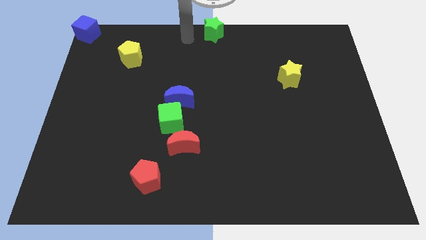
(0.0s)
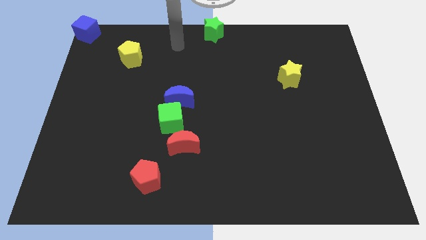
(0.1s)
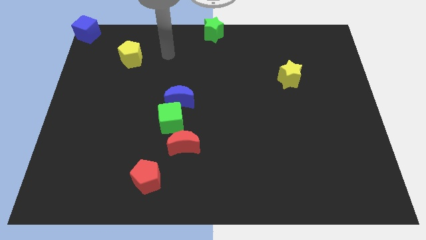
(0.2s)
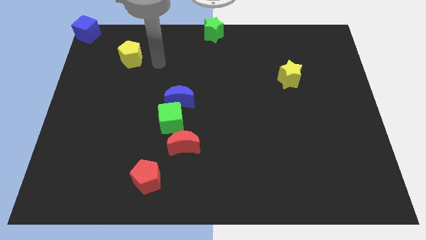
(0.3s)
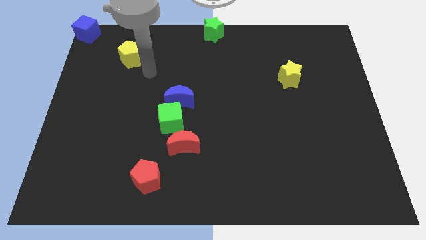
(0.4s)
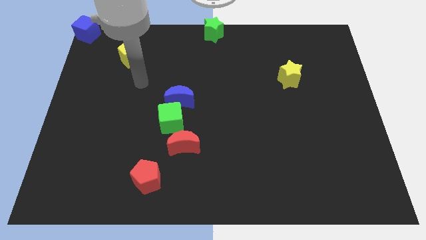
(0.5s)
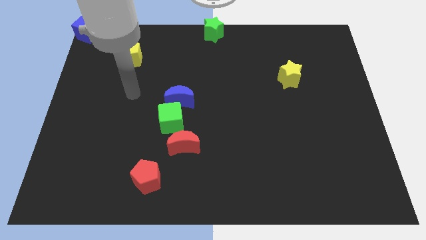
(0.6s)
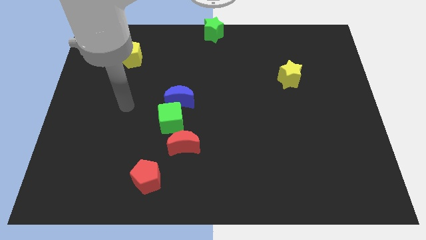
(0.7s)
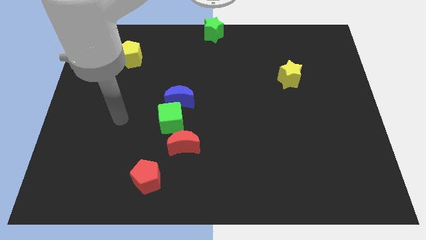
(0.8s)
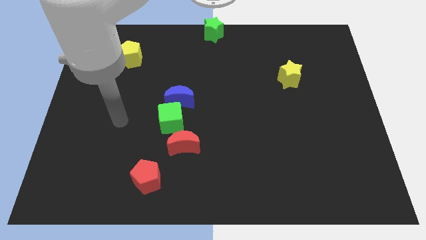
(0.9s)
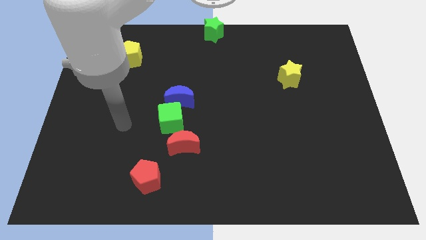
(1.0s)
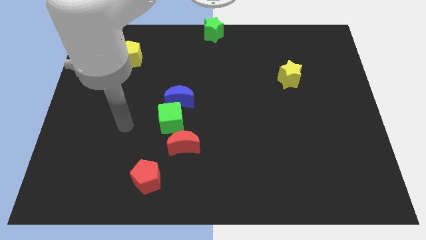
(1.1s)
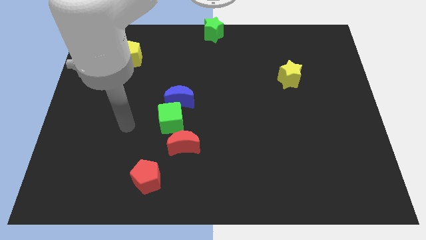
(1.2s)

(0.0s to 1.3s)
place your hand at left side of the green cube

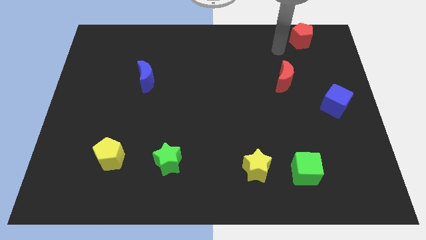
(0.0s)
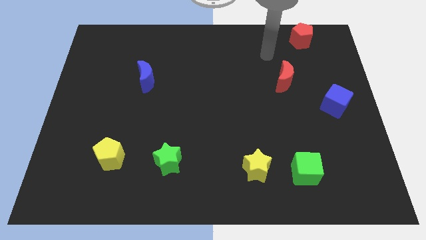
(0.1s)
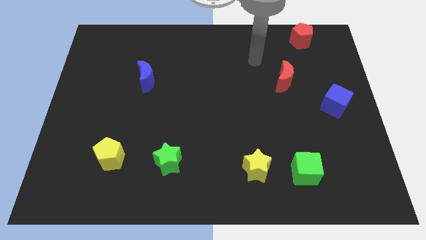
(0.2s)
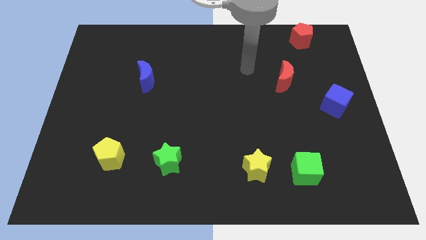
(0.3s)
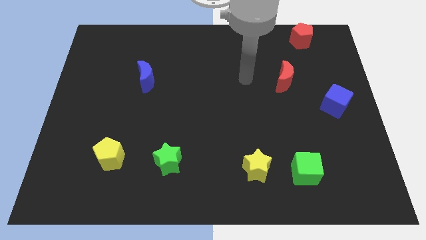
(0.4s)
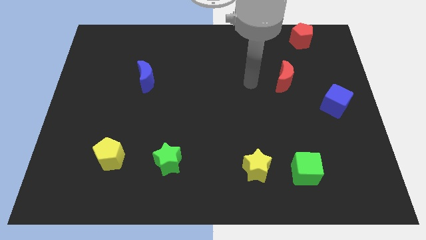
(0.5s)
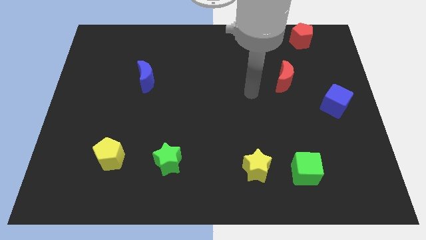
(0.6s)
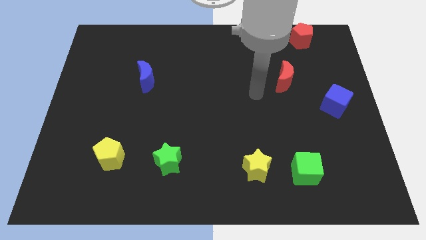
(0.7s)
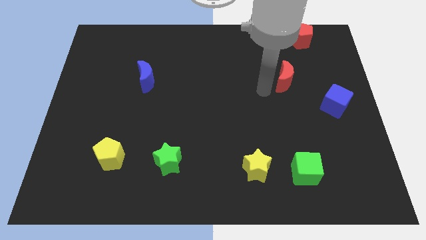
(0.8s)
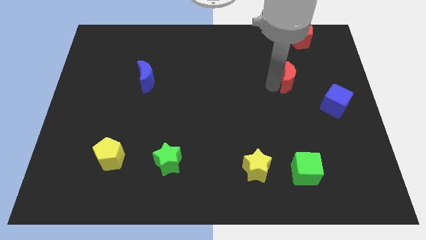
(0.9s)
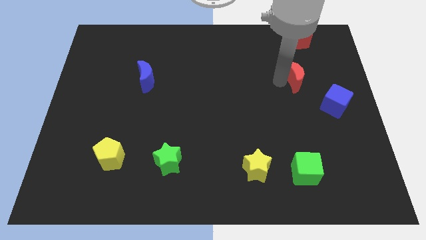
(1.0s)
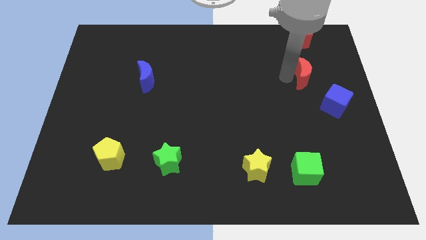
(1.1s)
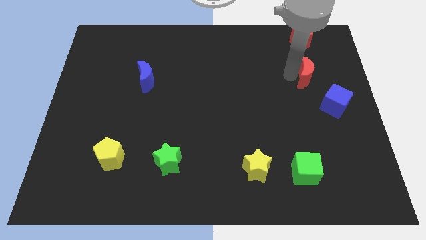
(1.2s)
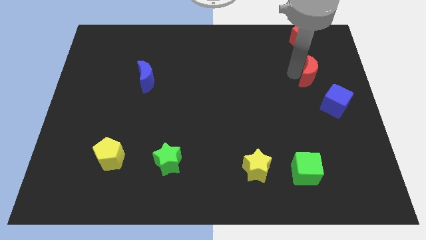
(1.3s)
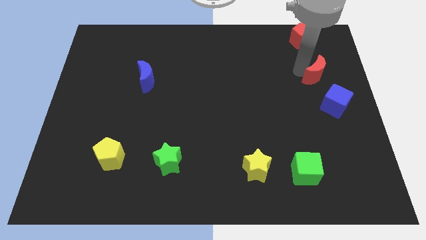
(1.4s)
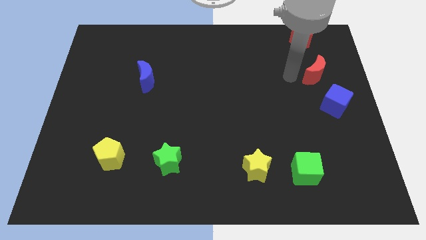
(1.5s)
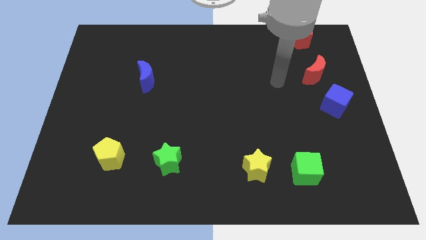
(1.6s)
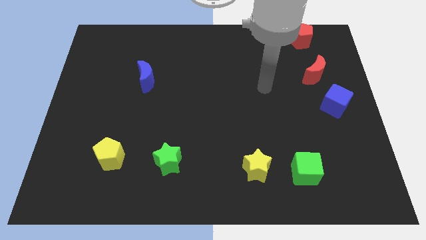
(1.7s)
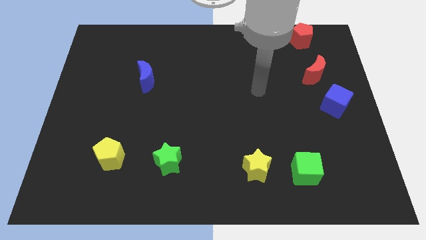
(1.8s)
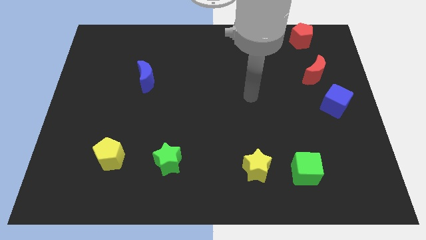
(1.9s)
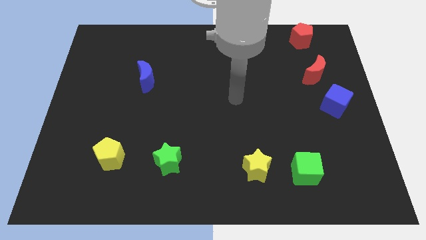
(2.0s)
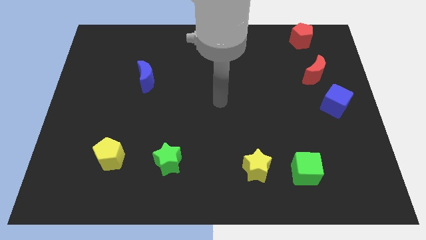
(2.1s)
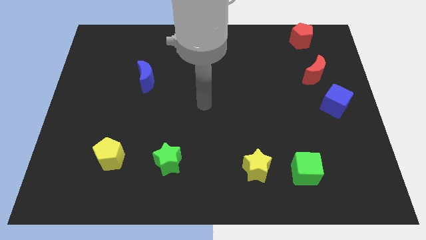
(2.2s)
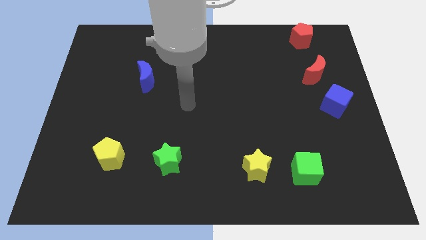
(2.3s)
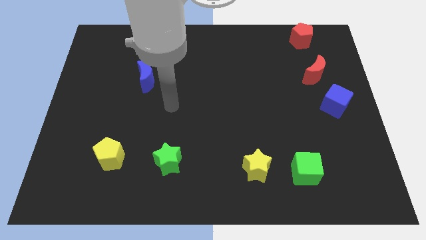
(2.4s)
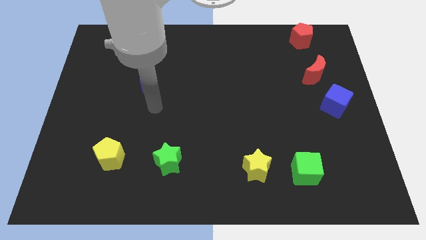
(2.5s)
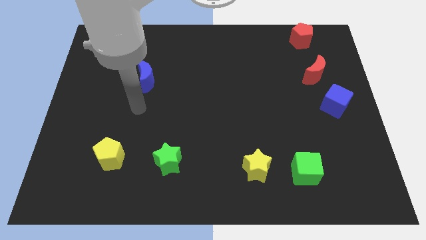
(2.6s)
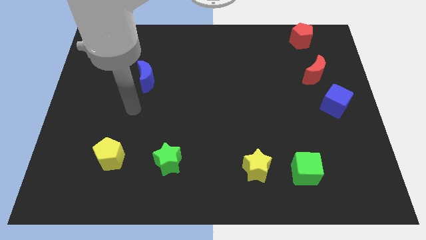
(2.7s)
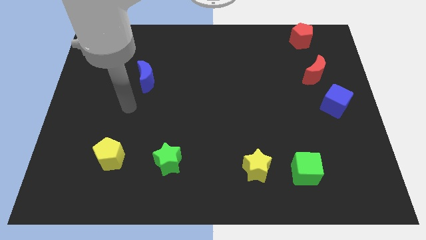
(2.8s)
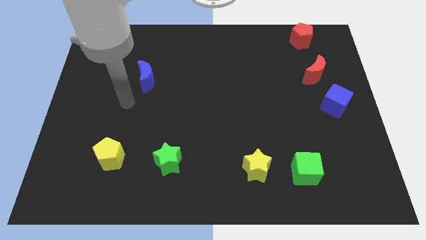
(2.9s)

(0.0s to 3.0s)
place the red crescent in between the red pentagon and blue cube and go away

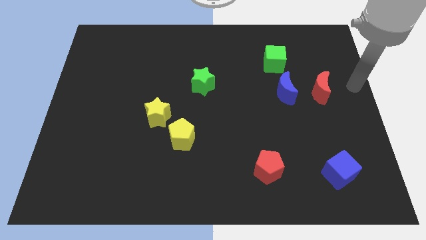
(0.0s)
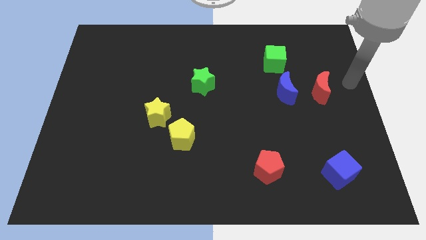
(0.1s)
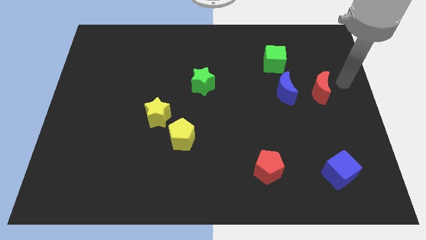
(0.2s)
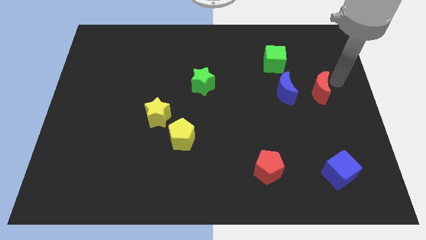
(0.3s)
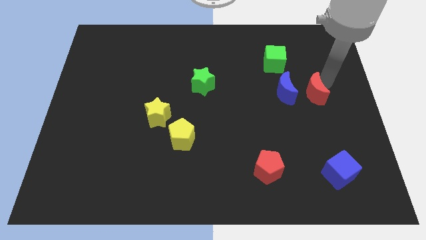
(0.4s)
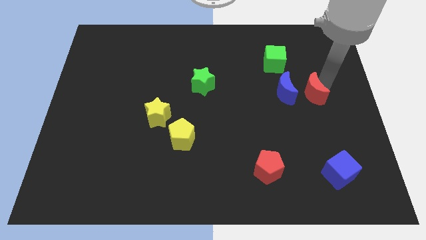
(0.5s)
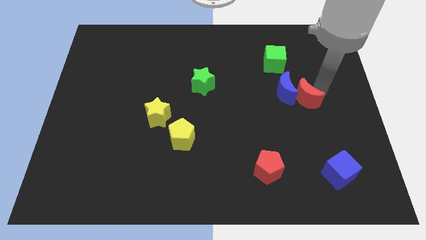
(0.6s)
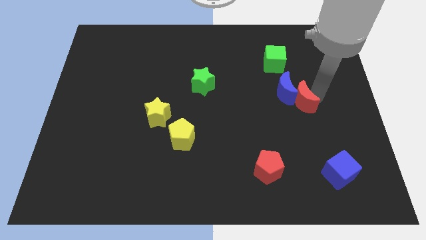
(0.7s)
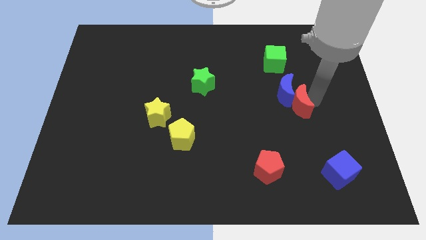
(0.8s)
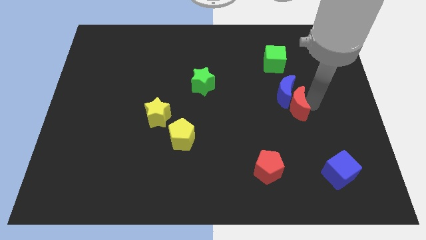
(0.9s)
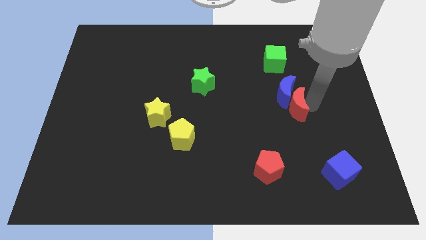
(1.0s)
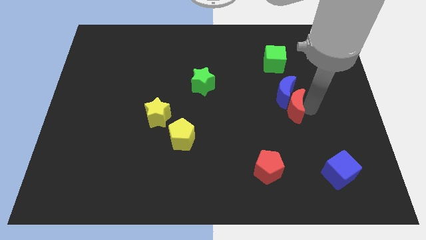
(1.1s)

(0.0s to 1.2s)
move red moon into blue moon

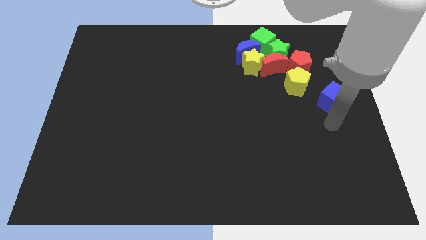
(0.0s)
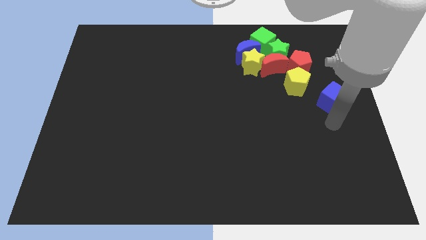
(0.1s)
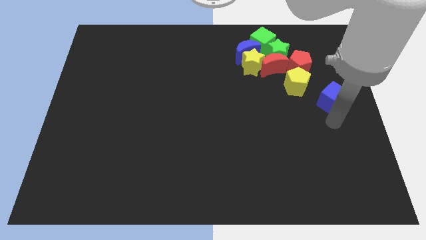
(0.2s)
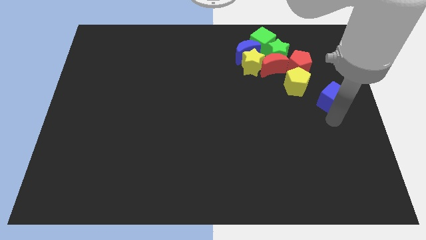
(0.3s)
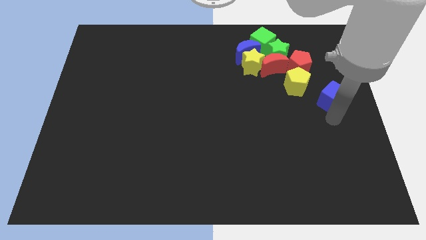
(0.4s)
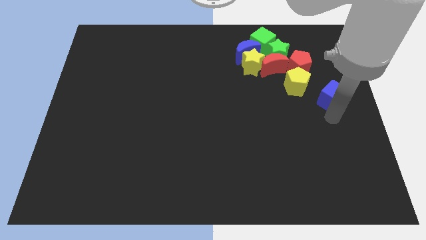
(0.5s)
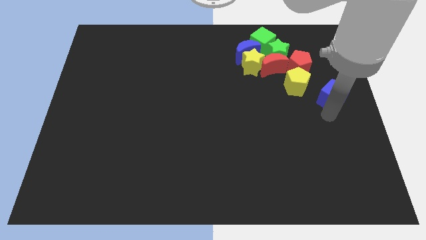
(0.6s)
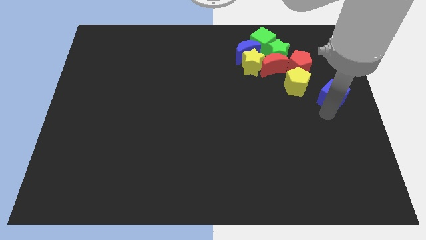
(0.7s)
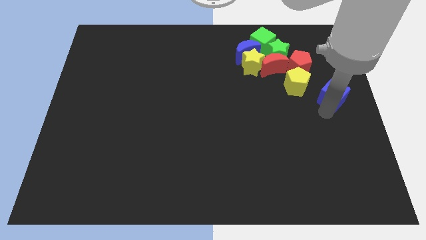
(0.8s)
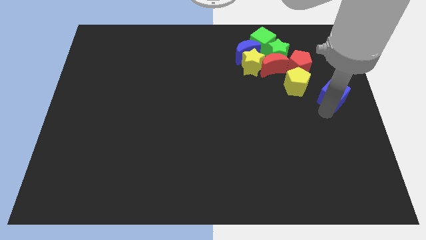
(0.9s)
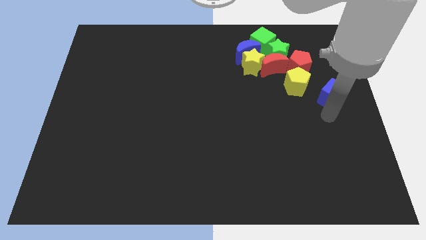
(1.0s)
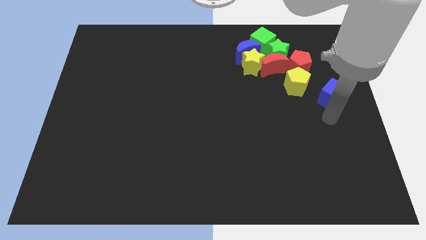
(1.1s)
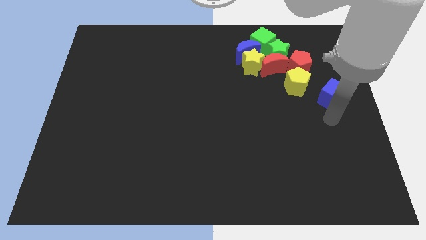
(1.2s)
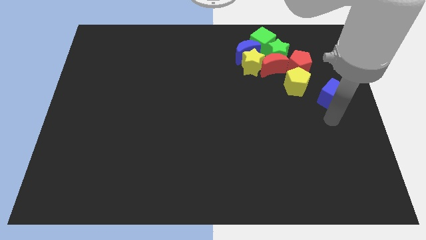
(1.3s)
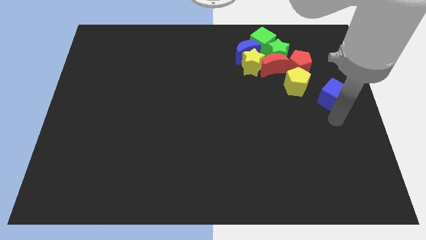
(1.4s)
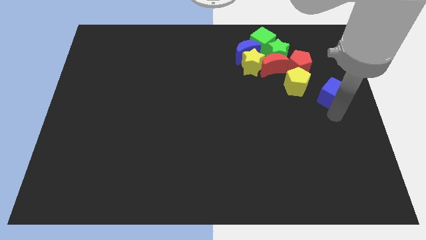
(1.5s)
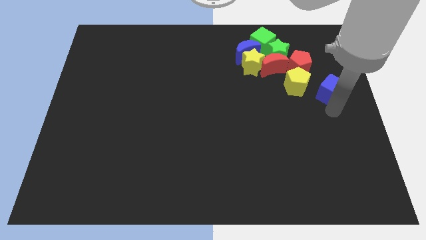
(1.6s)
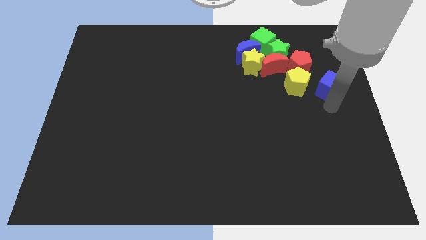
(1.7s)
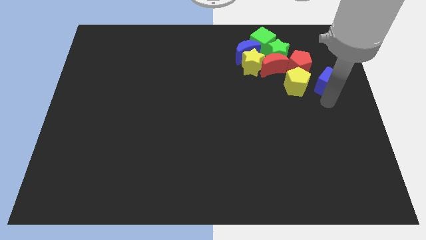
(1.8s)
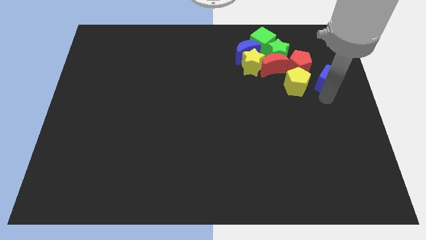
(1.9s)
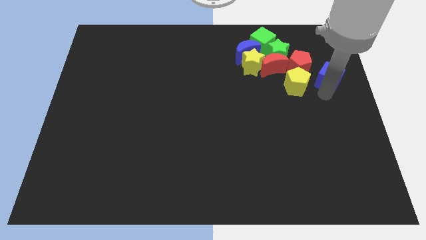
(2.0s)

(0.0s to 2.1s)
move blue cube to the right of yellow pentagon

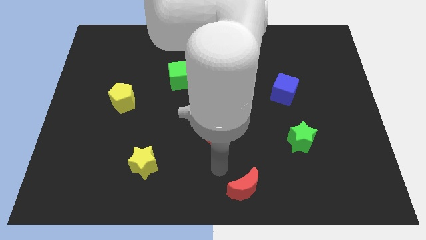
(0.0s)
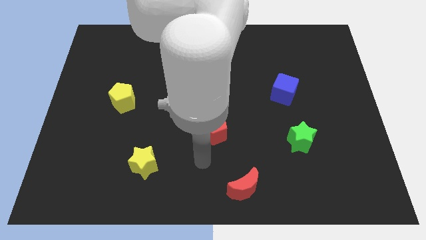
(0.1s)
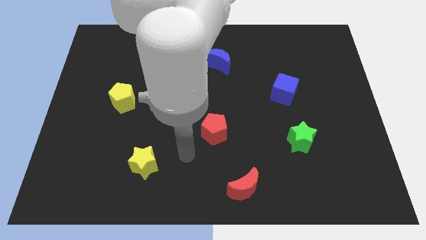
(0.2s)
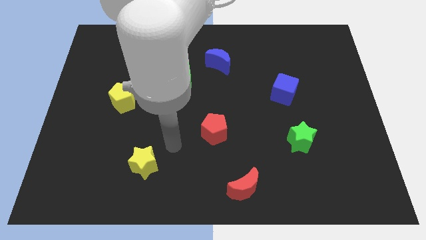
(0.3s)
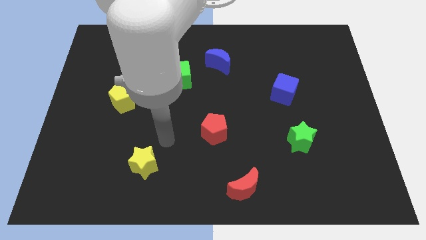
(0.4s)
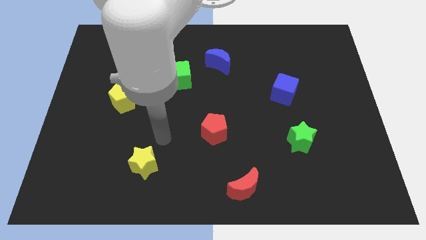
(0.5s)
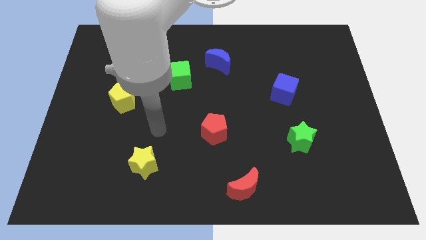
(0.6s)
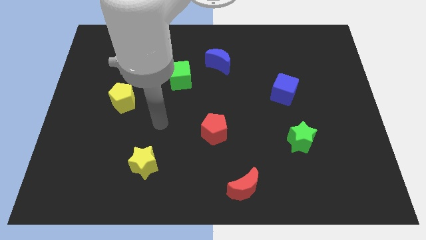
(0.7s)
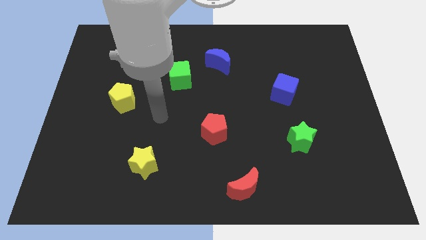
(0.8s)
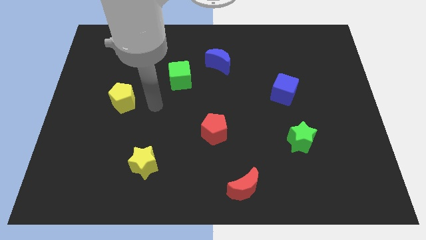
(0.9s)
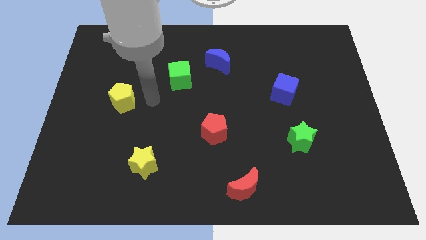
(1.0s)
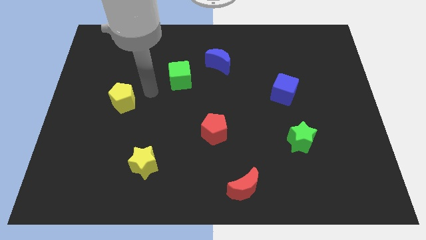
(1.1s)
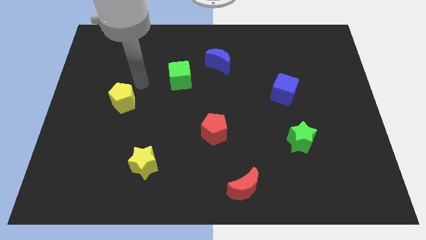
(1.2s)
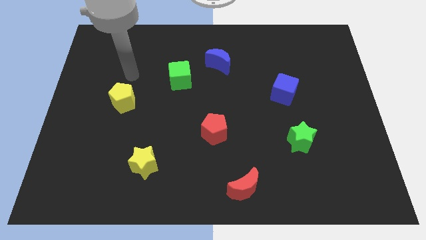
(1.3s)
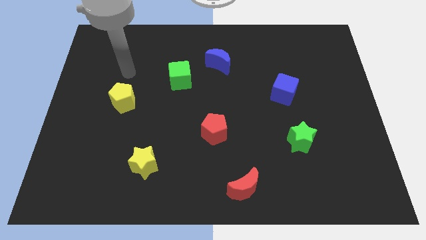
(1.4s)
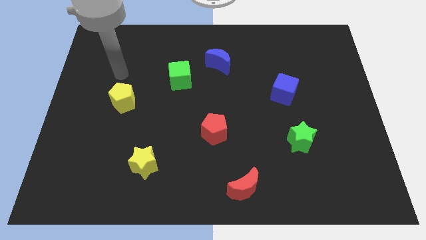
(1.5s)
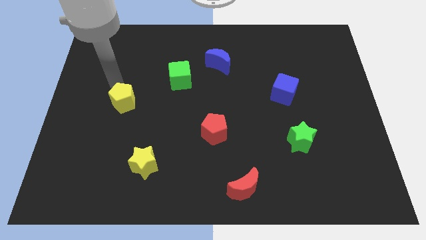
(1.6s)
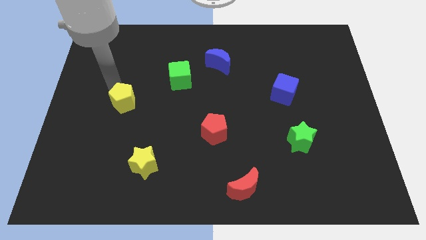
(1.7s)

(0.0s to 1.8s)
move your hand above the yellow pentagon
